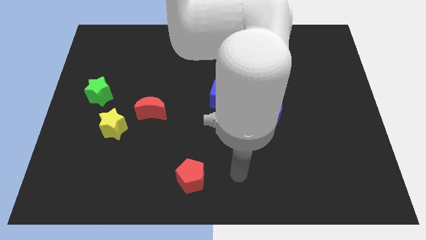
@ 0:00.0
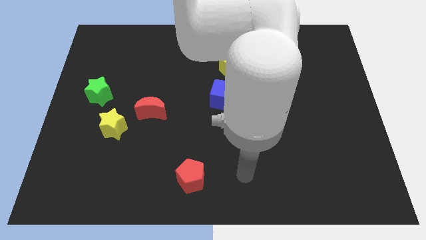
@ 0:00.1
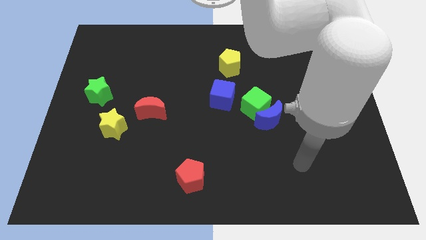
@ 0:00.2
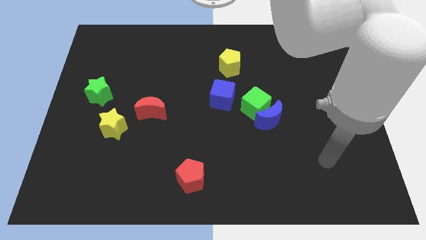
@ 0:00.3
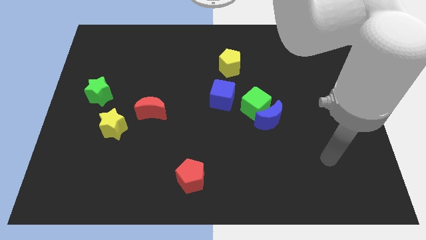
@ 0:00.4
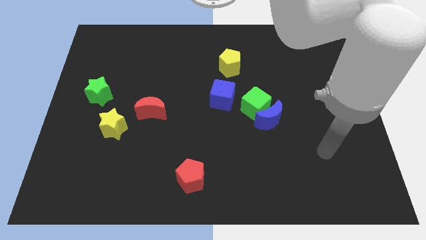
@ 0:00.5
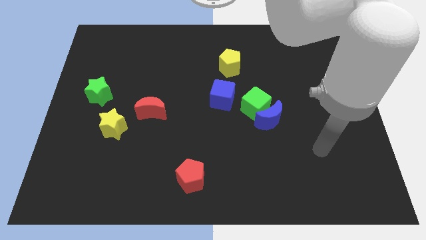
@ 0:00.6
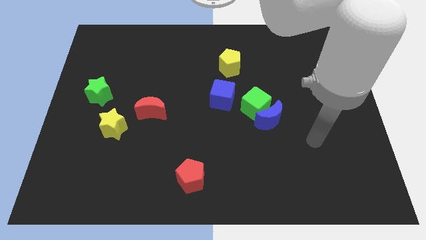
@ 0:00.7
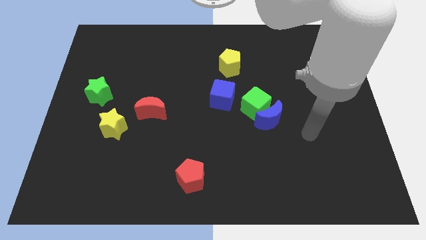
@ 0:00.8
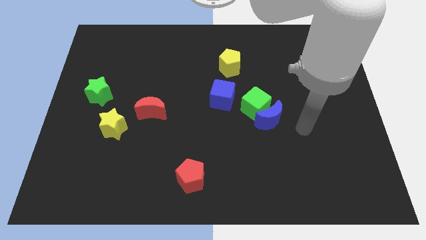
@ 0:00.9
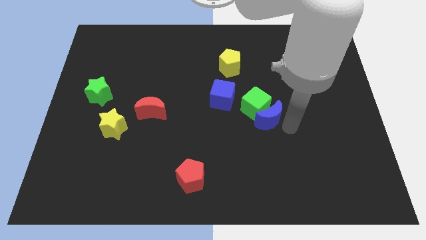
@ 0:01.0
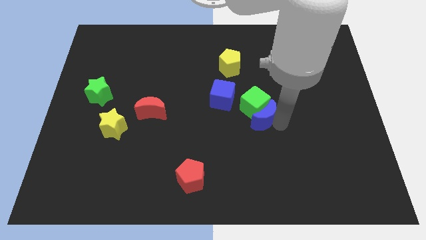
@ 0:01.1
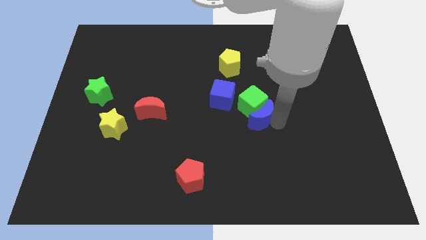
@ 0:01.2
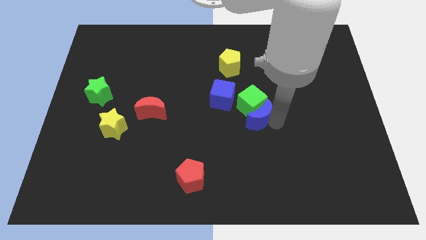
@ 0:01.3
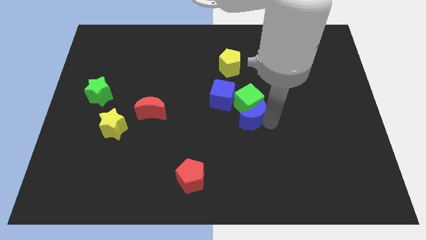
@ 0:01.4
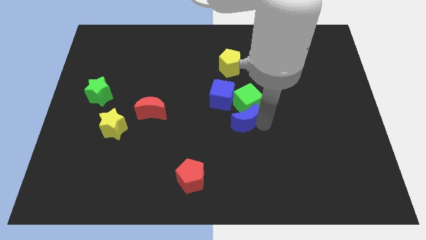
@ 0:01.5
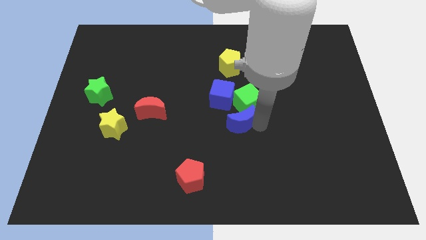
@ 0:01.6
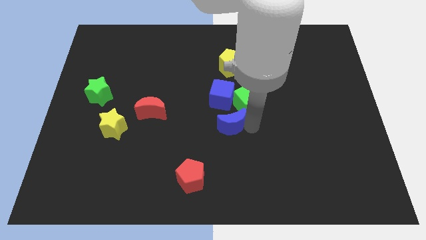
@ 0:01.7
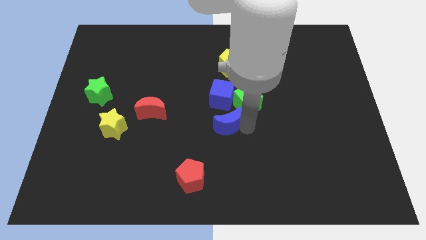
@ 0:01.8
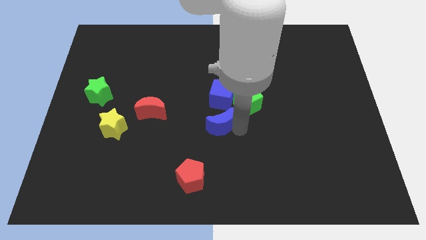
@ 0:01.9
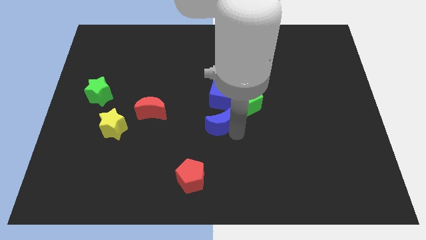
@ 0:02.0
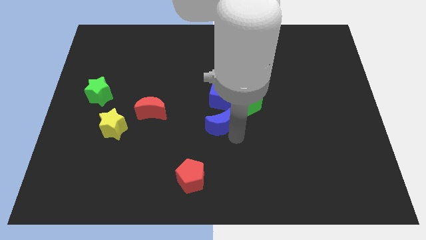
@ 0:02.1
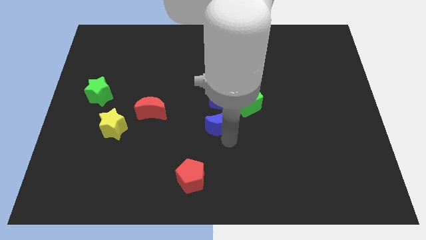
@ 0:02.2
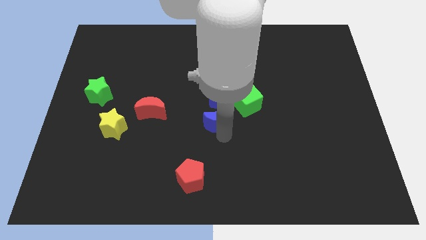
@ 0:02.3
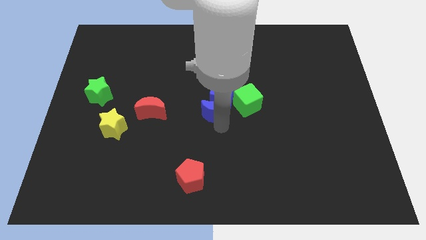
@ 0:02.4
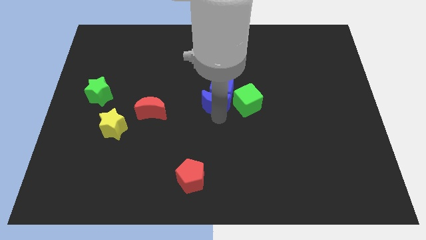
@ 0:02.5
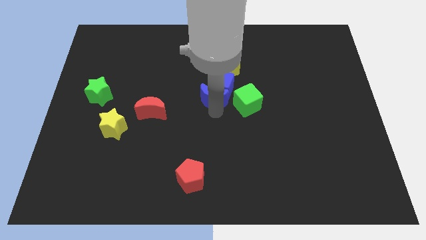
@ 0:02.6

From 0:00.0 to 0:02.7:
put the blue moon next to the blue cube

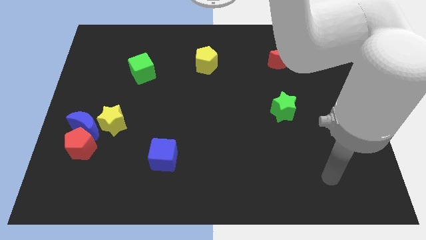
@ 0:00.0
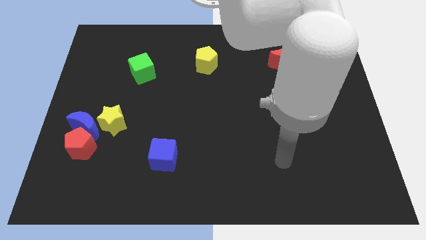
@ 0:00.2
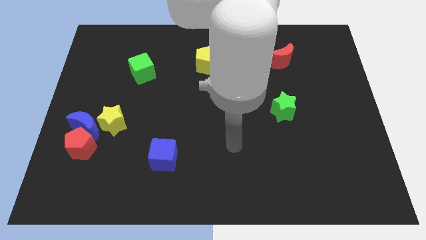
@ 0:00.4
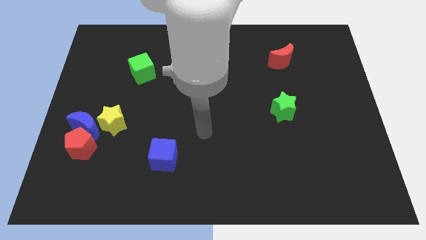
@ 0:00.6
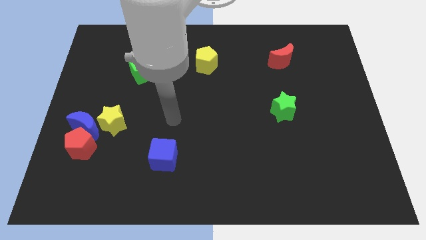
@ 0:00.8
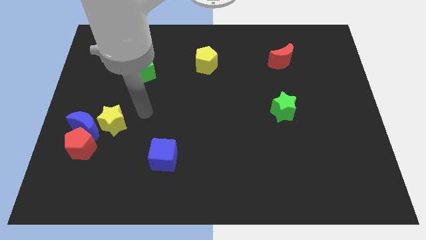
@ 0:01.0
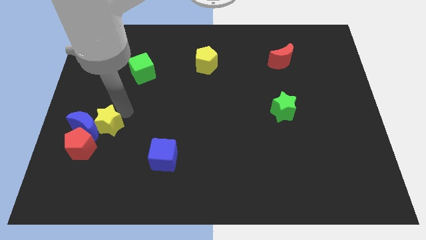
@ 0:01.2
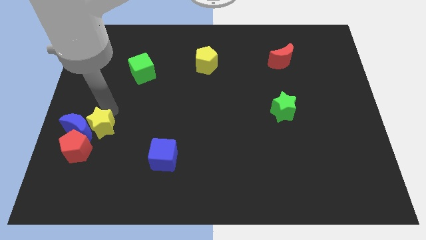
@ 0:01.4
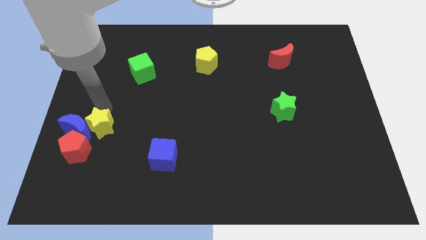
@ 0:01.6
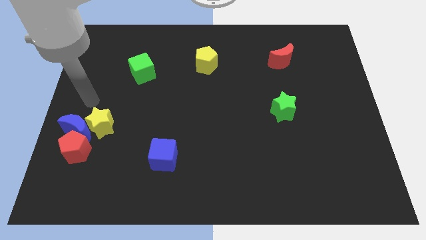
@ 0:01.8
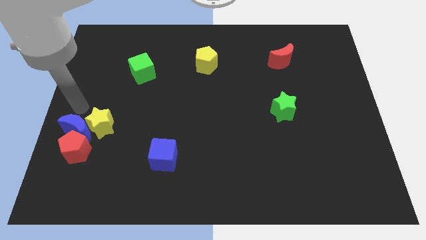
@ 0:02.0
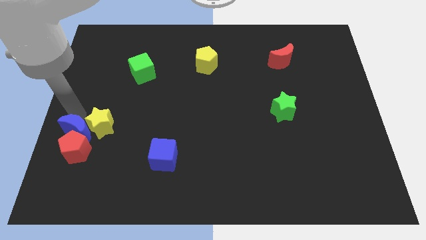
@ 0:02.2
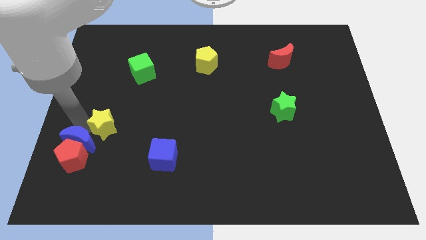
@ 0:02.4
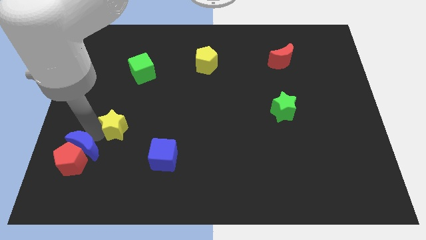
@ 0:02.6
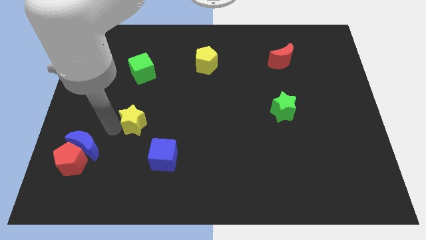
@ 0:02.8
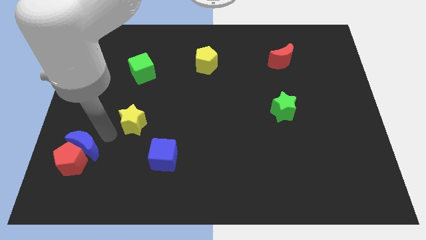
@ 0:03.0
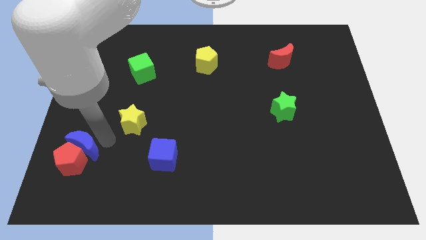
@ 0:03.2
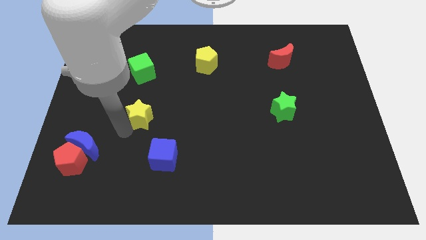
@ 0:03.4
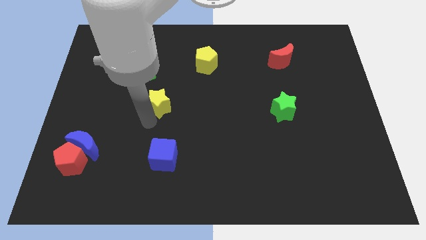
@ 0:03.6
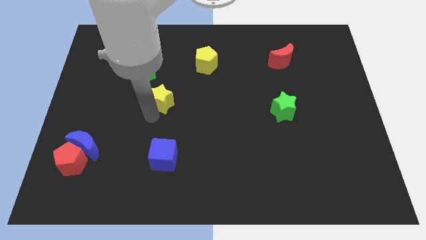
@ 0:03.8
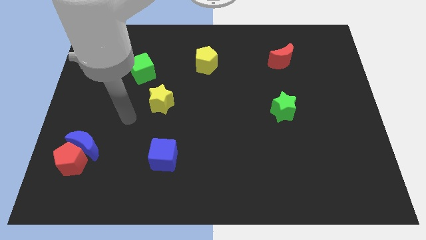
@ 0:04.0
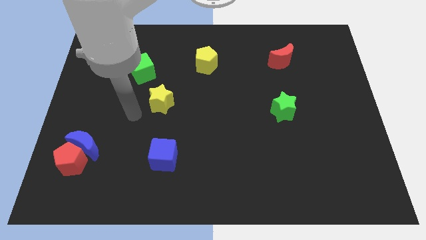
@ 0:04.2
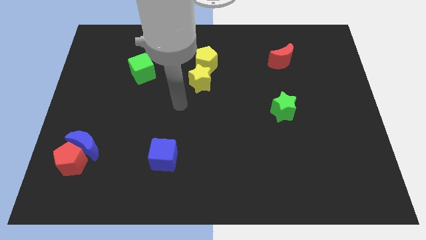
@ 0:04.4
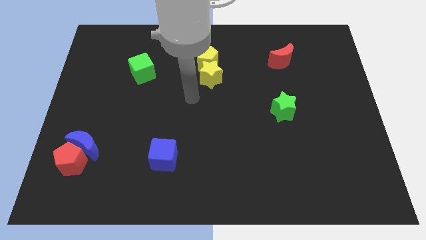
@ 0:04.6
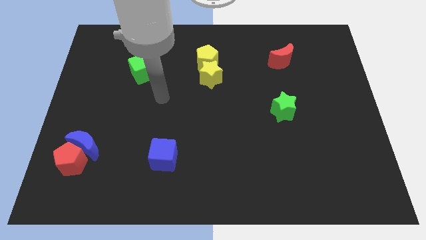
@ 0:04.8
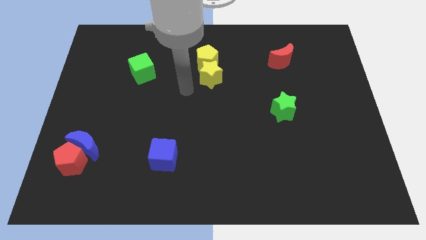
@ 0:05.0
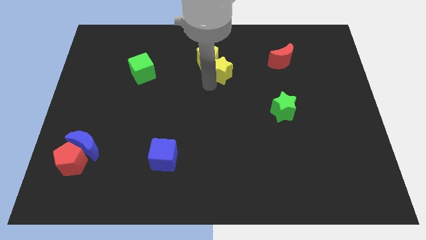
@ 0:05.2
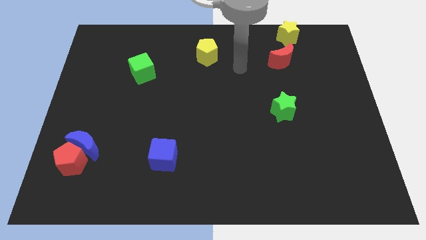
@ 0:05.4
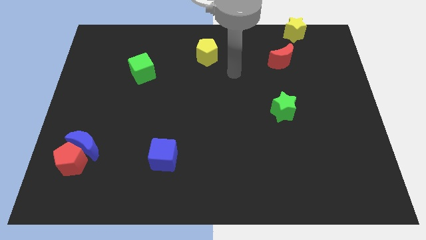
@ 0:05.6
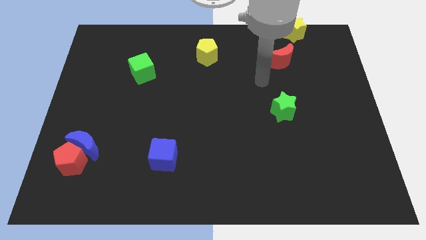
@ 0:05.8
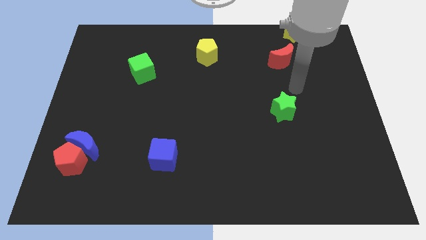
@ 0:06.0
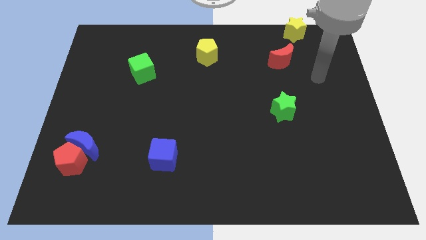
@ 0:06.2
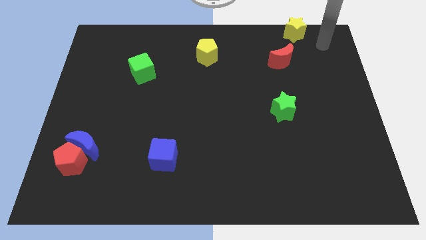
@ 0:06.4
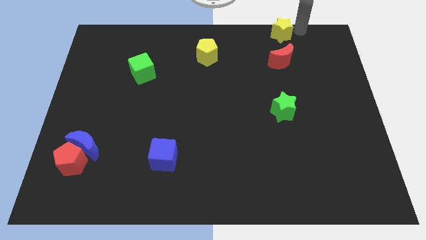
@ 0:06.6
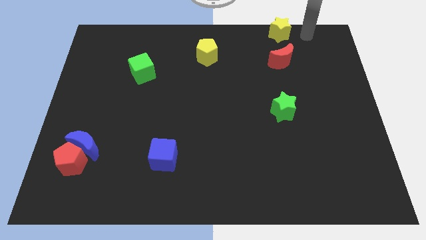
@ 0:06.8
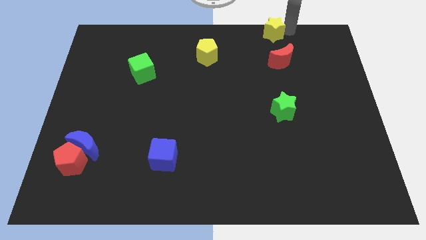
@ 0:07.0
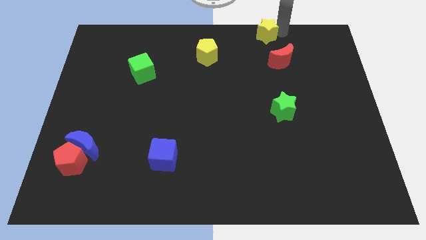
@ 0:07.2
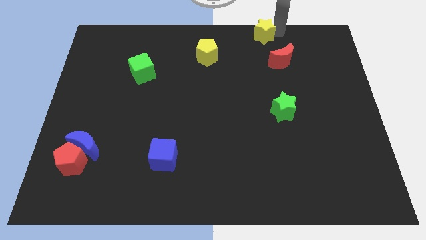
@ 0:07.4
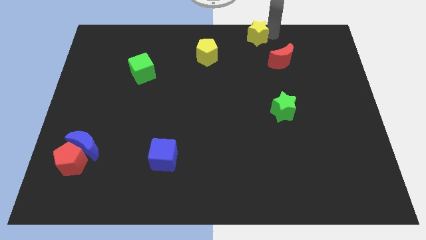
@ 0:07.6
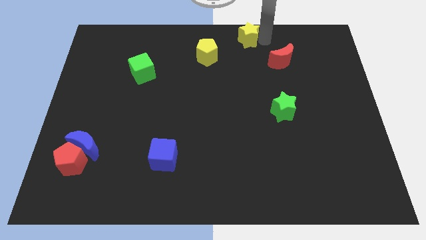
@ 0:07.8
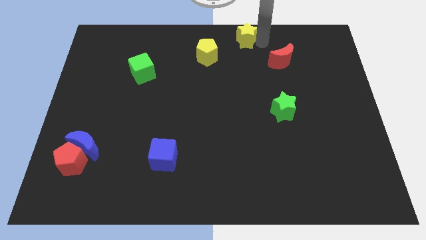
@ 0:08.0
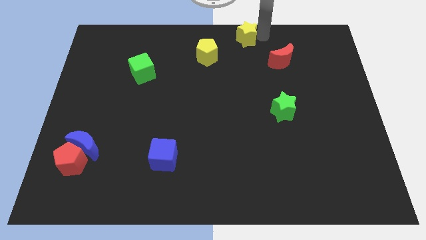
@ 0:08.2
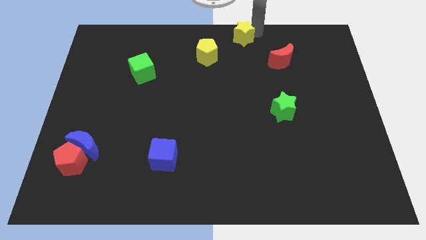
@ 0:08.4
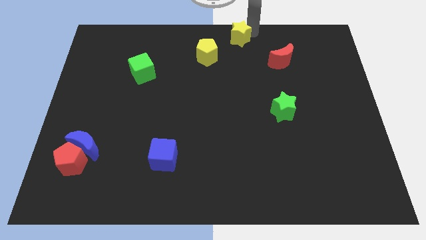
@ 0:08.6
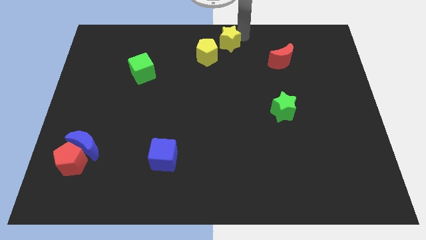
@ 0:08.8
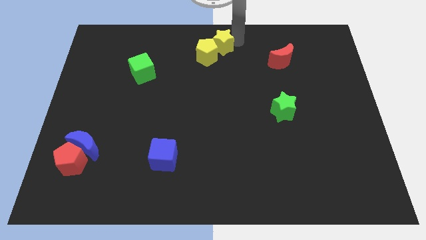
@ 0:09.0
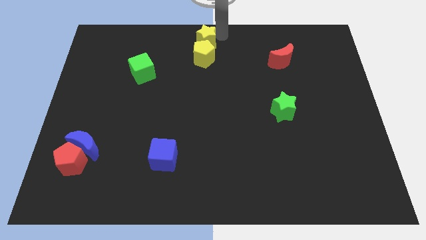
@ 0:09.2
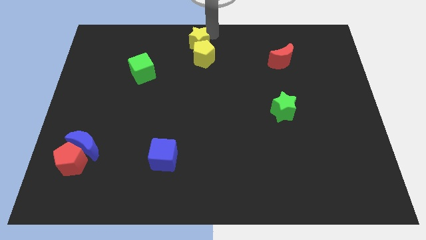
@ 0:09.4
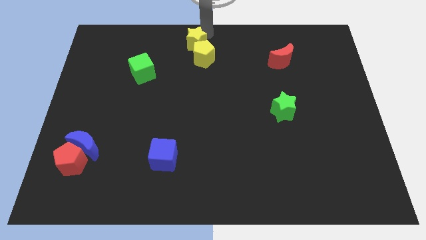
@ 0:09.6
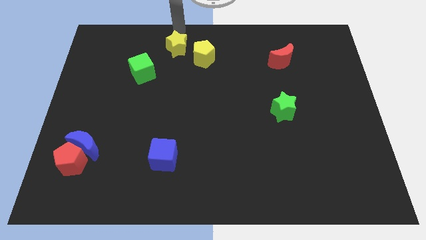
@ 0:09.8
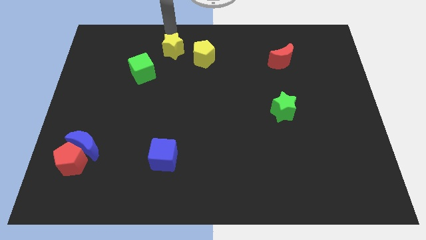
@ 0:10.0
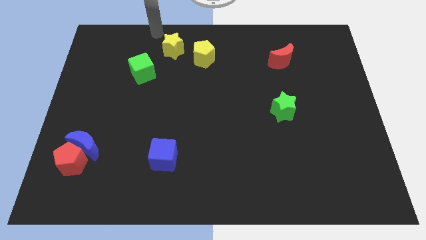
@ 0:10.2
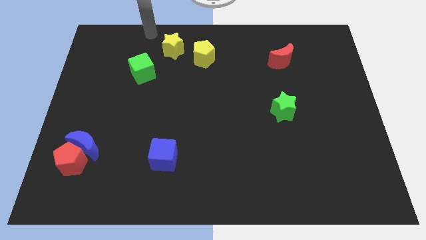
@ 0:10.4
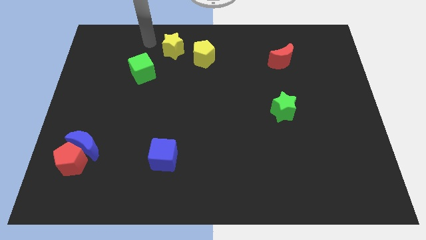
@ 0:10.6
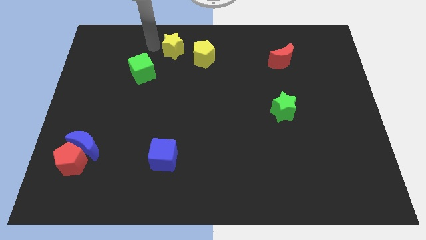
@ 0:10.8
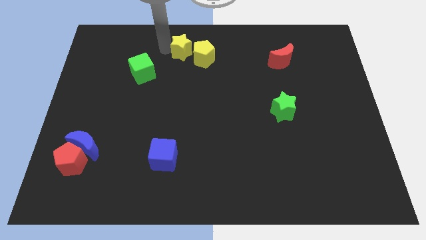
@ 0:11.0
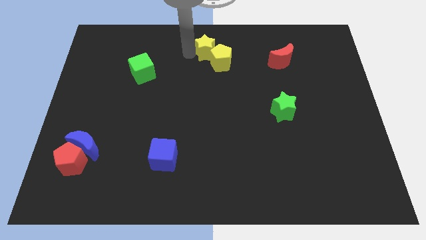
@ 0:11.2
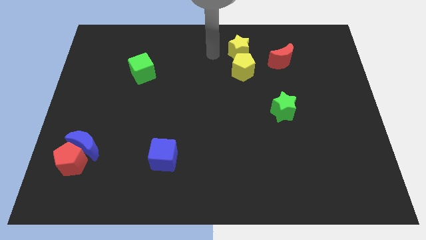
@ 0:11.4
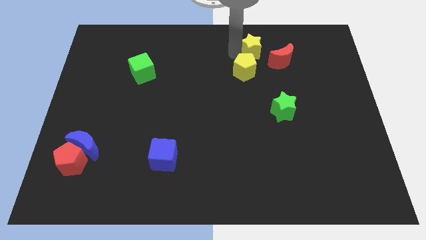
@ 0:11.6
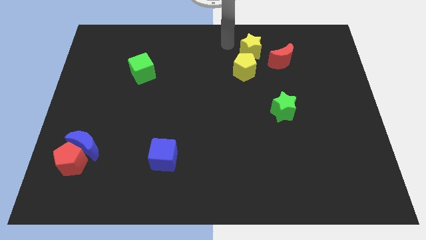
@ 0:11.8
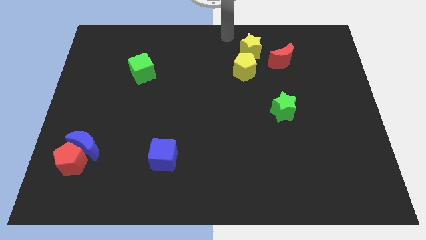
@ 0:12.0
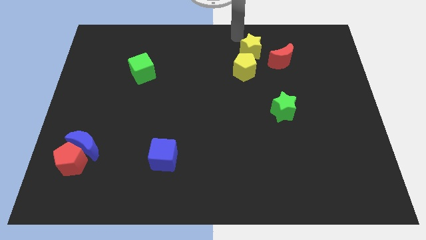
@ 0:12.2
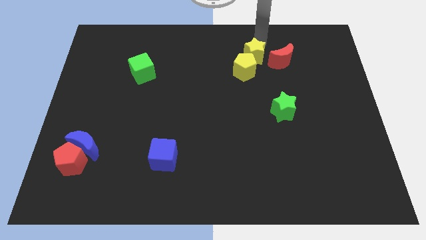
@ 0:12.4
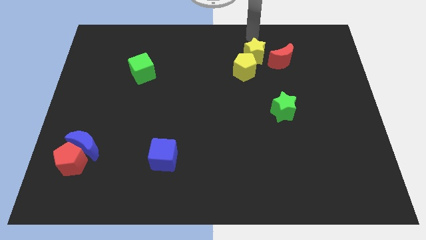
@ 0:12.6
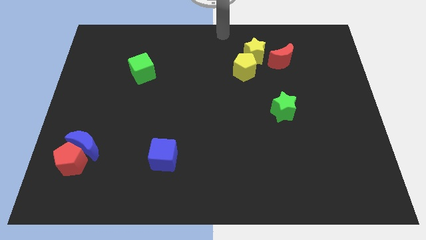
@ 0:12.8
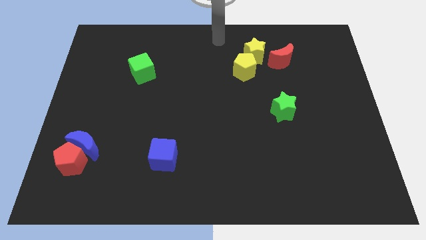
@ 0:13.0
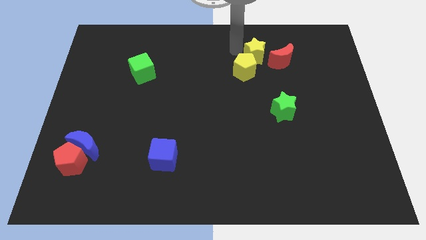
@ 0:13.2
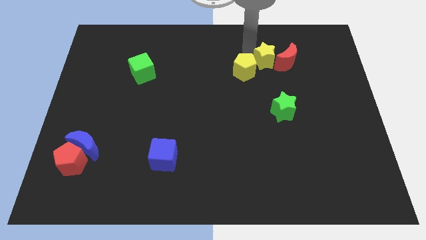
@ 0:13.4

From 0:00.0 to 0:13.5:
move the yellow star close to the red moon
